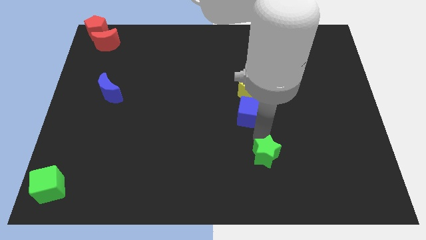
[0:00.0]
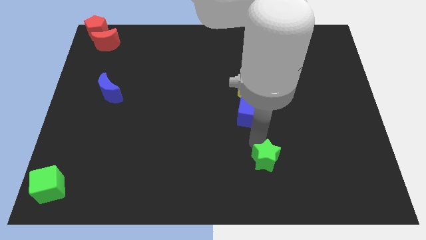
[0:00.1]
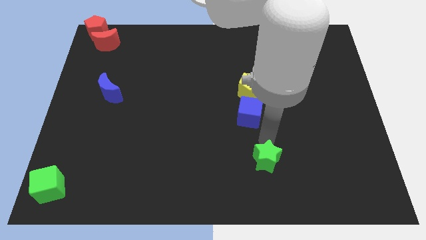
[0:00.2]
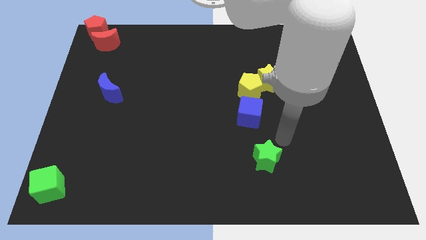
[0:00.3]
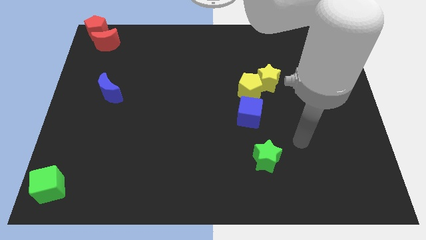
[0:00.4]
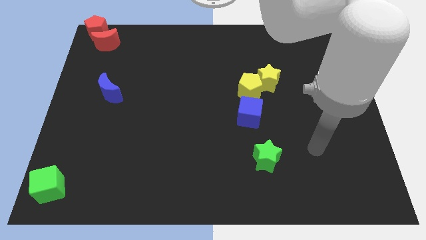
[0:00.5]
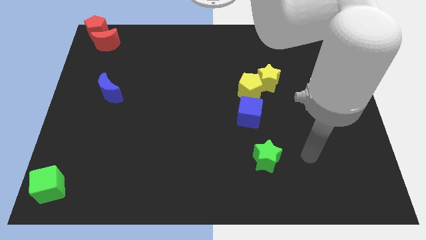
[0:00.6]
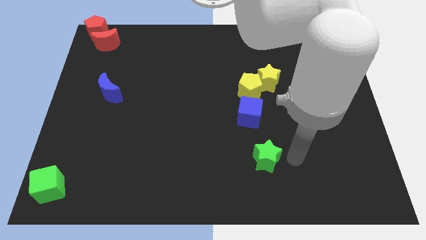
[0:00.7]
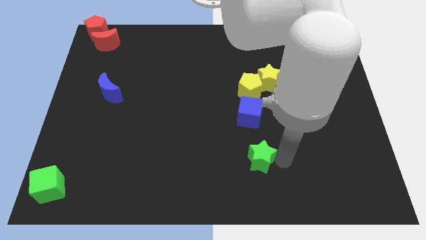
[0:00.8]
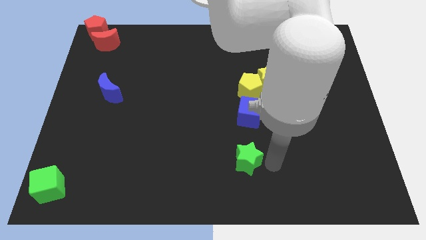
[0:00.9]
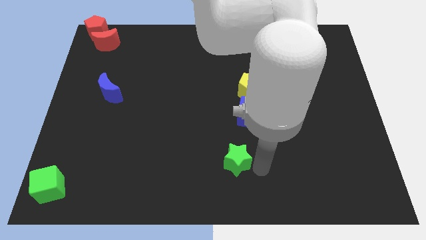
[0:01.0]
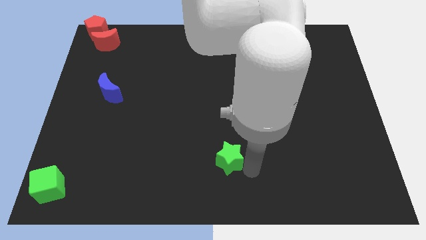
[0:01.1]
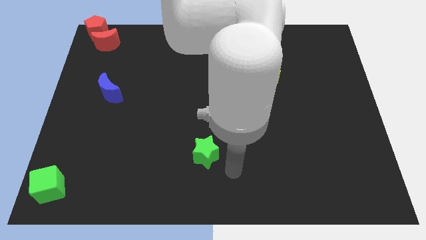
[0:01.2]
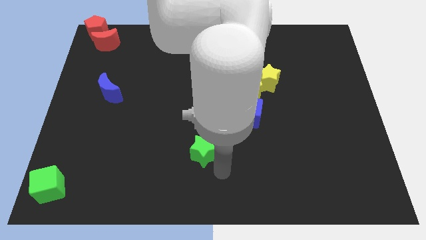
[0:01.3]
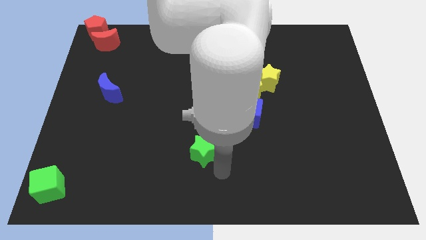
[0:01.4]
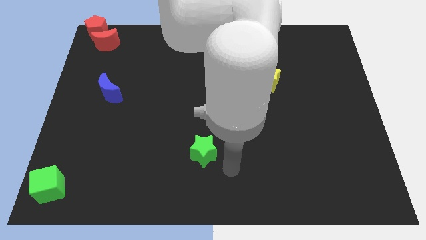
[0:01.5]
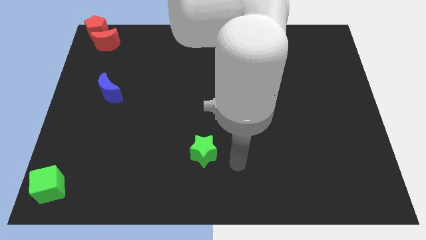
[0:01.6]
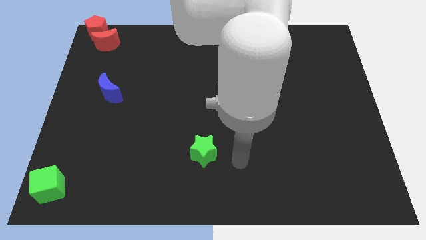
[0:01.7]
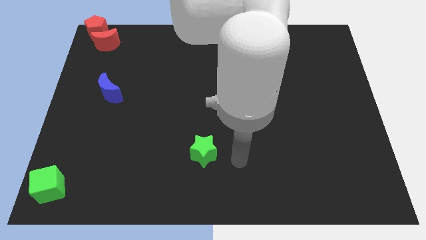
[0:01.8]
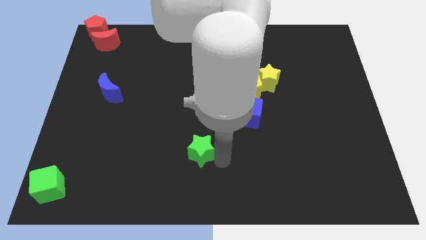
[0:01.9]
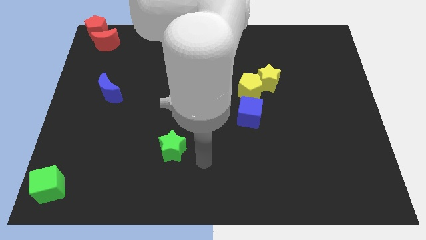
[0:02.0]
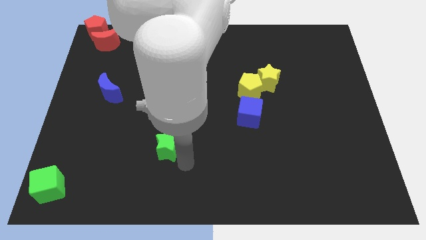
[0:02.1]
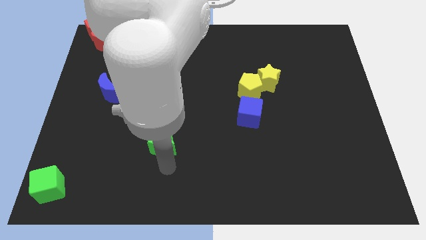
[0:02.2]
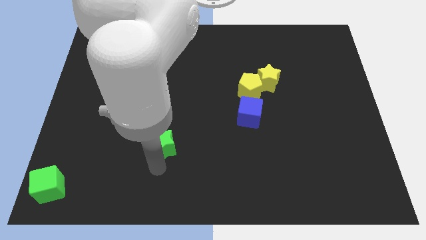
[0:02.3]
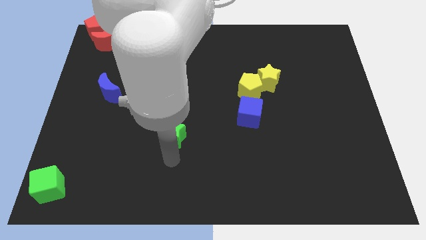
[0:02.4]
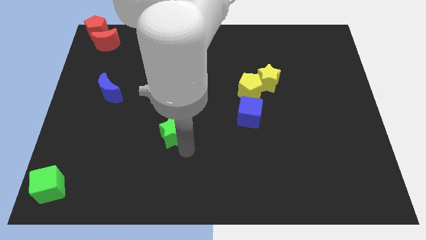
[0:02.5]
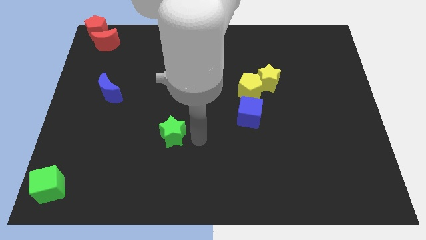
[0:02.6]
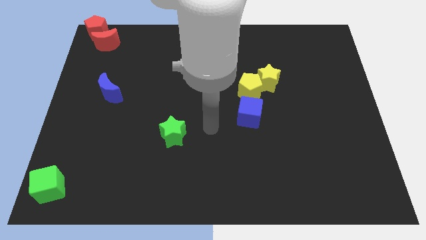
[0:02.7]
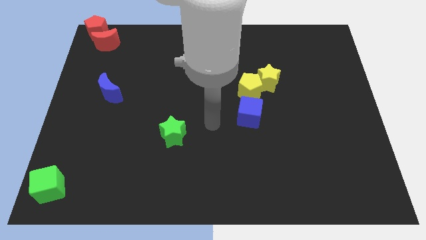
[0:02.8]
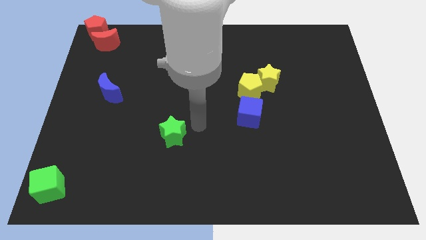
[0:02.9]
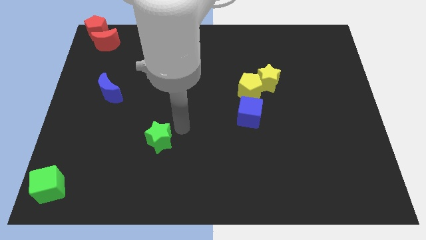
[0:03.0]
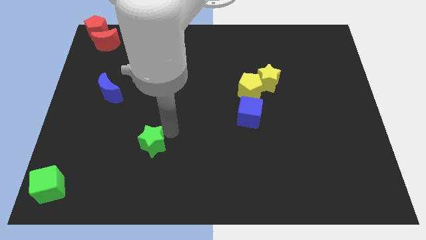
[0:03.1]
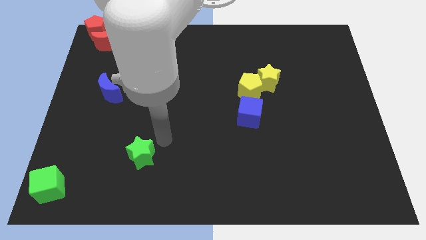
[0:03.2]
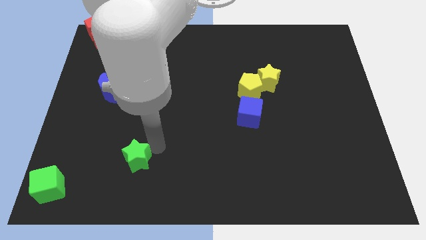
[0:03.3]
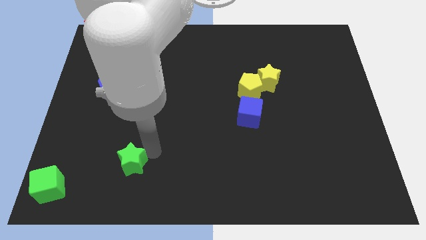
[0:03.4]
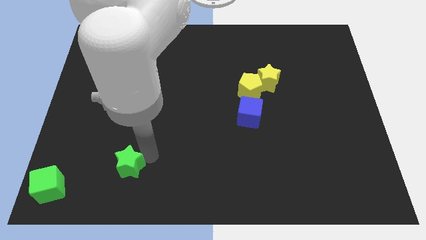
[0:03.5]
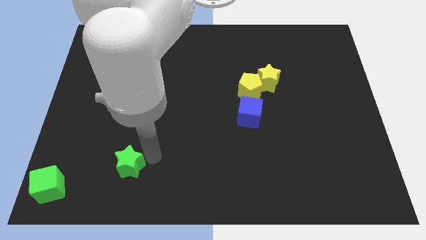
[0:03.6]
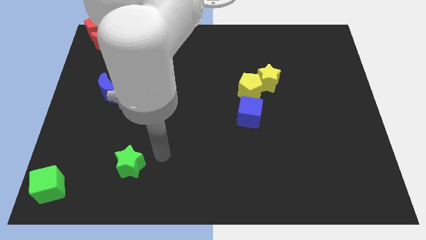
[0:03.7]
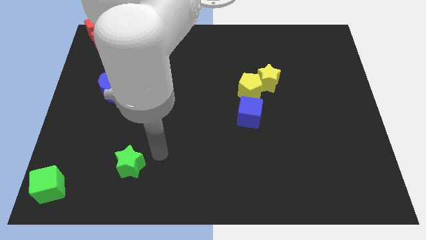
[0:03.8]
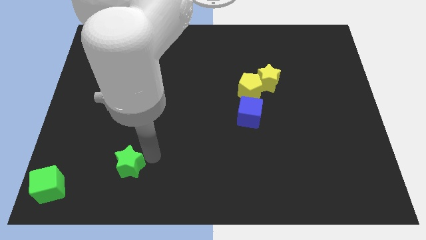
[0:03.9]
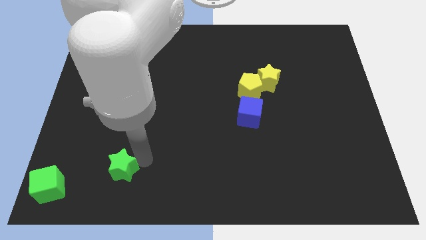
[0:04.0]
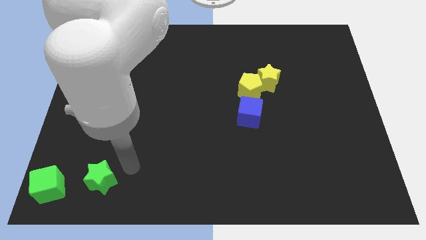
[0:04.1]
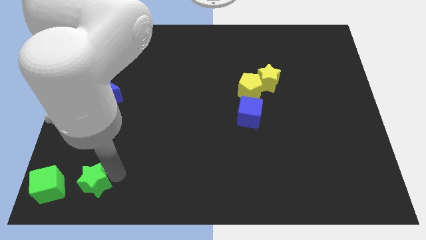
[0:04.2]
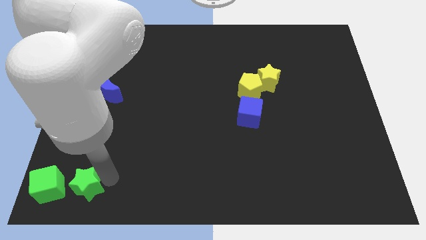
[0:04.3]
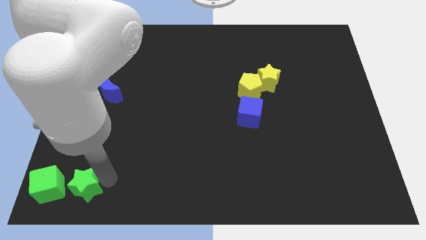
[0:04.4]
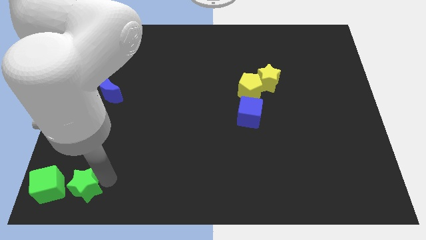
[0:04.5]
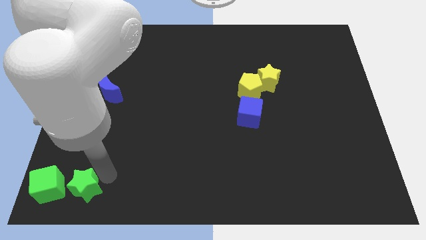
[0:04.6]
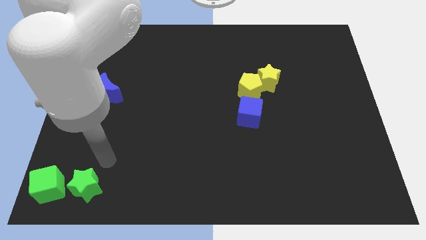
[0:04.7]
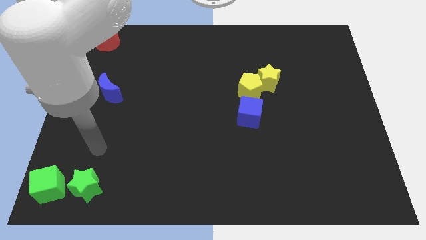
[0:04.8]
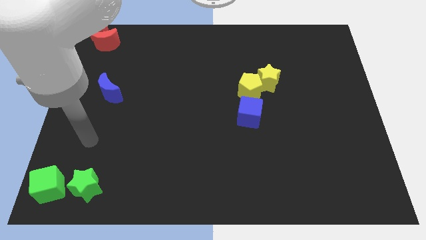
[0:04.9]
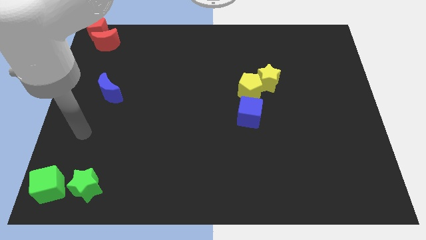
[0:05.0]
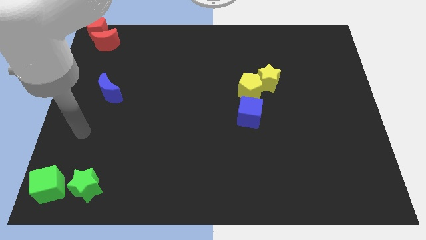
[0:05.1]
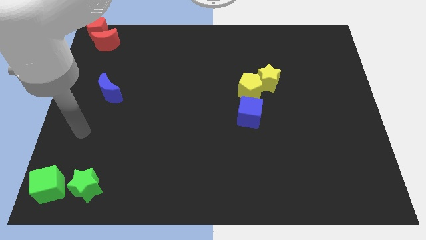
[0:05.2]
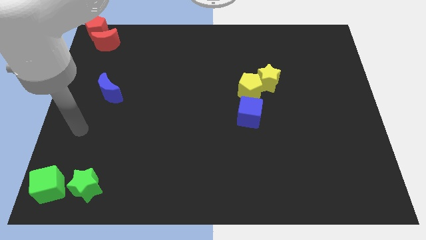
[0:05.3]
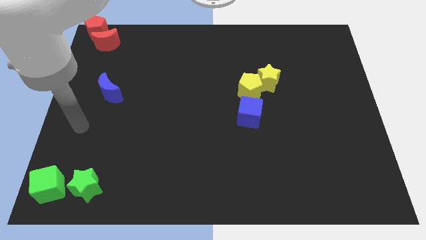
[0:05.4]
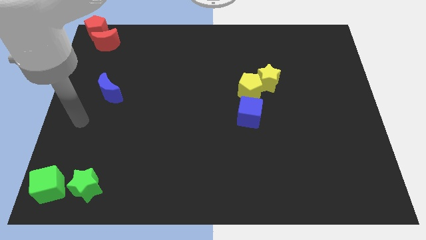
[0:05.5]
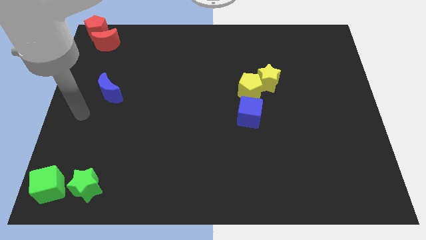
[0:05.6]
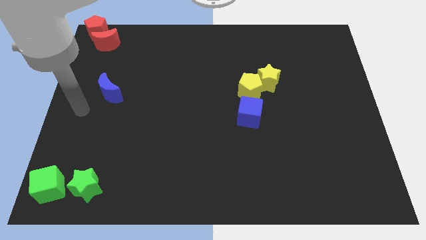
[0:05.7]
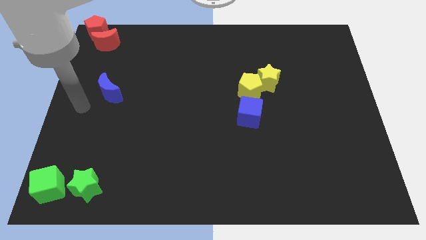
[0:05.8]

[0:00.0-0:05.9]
place the green star to the left side of the green cube

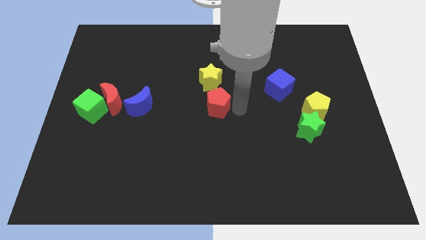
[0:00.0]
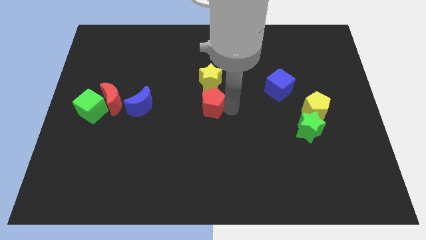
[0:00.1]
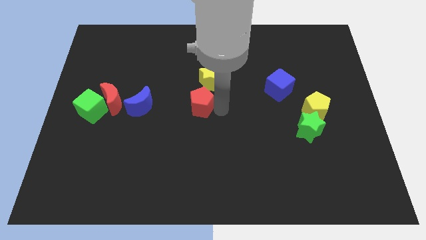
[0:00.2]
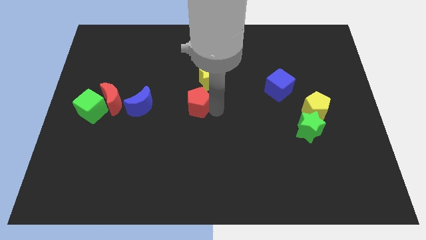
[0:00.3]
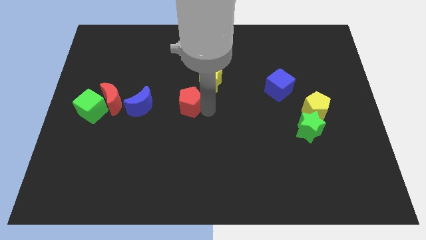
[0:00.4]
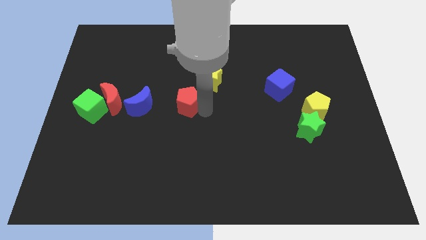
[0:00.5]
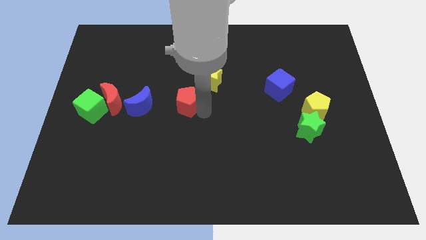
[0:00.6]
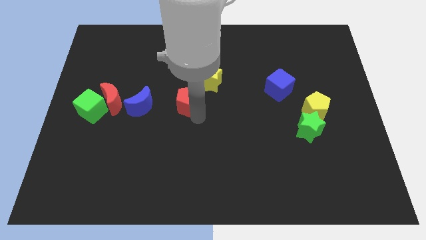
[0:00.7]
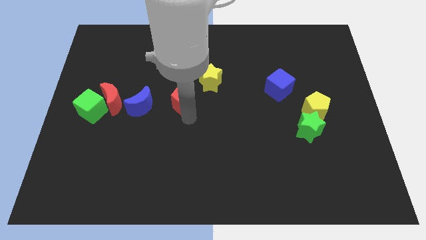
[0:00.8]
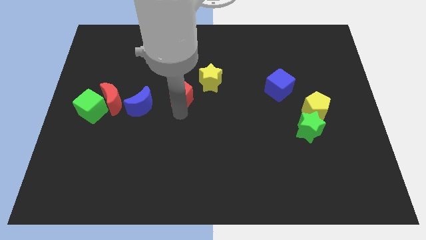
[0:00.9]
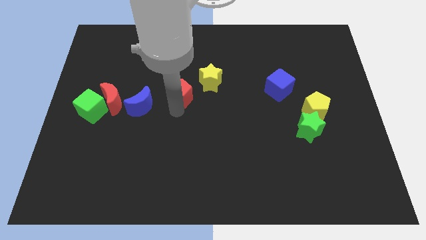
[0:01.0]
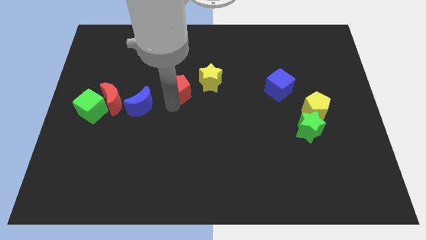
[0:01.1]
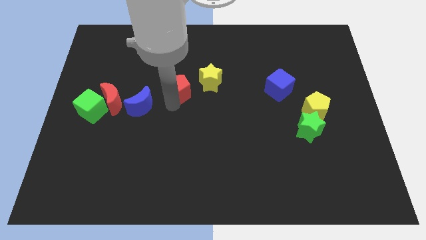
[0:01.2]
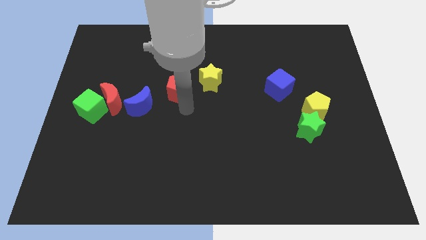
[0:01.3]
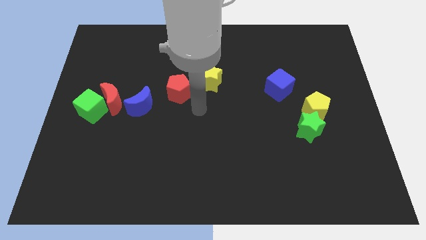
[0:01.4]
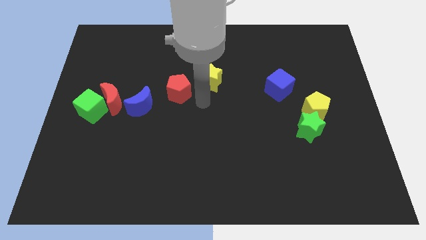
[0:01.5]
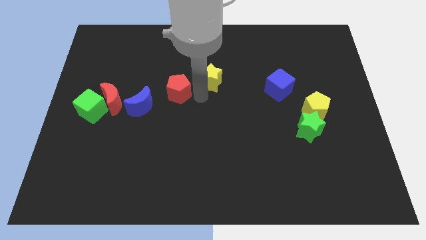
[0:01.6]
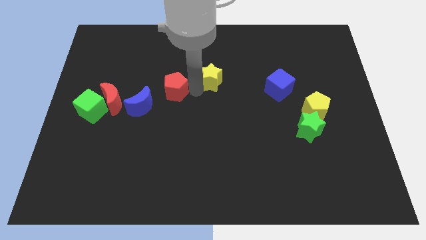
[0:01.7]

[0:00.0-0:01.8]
move the red pentagon to the left of the yellow star

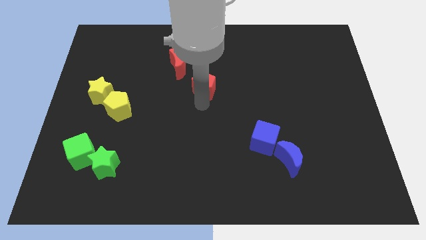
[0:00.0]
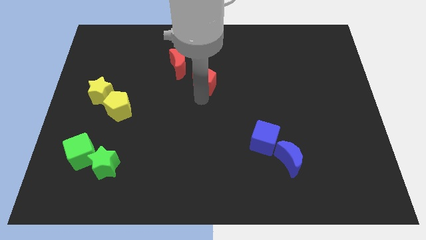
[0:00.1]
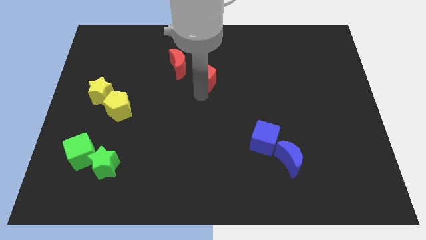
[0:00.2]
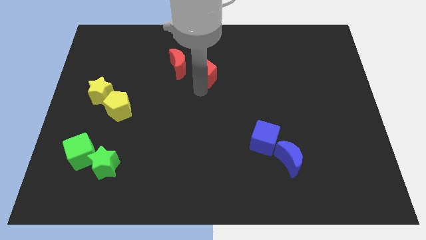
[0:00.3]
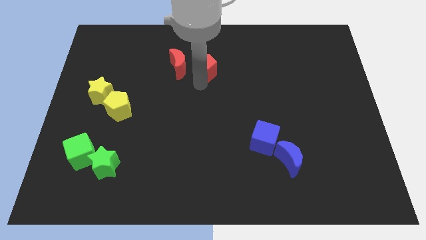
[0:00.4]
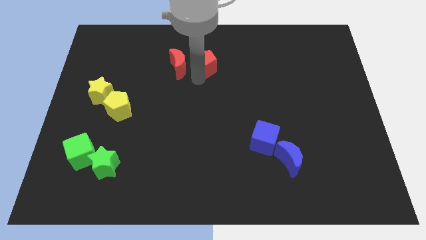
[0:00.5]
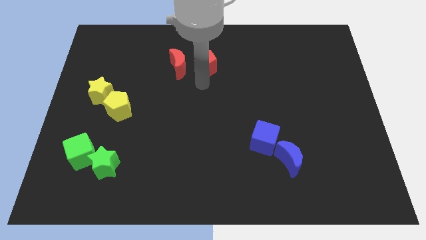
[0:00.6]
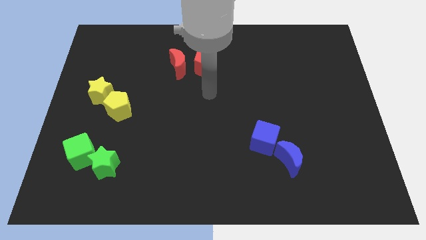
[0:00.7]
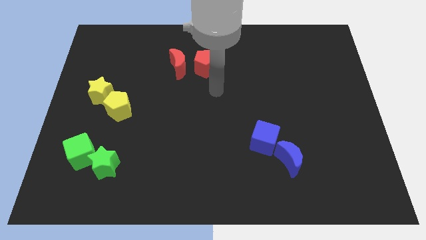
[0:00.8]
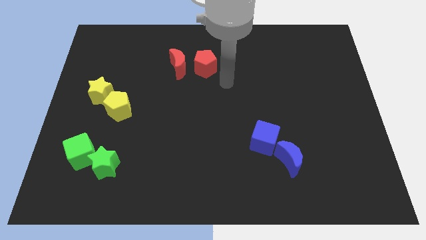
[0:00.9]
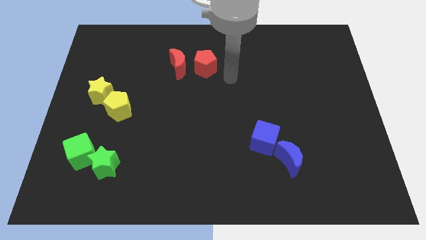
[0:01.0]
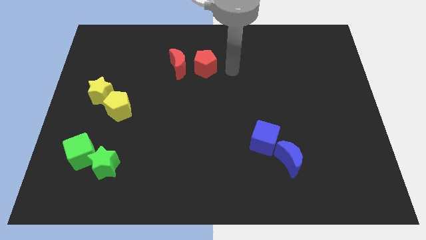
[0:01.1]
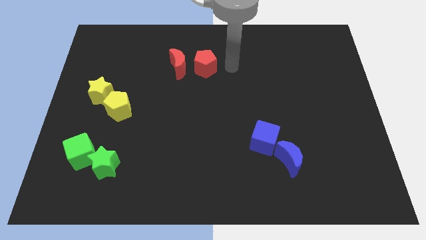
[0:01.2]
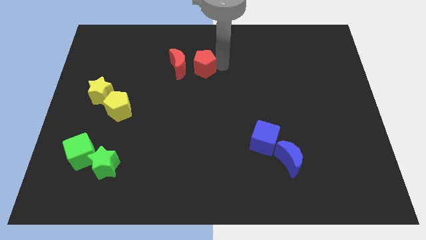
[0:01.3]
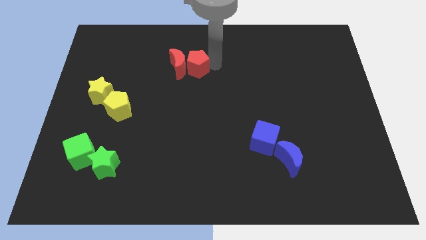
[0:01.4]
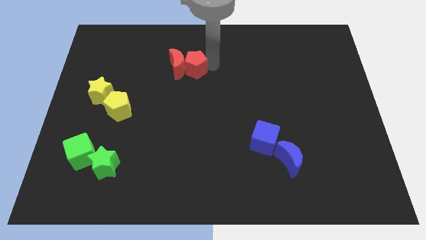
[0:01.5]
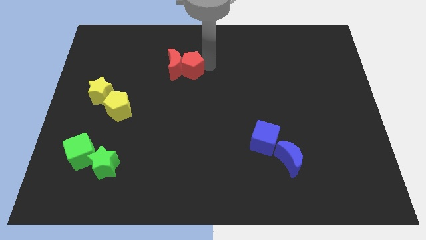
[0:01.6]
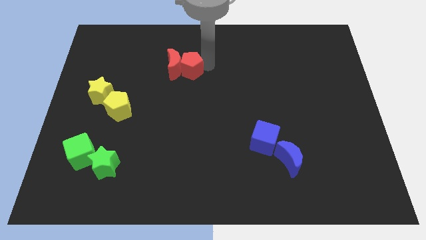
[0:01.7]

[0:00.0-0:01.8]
push the red pentagon into the right side of the red crescent
